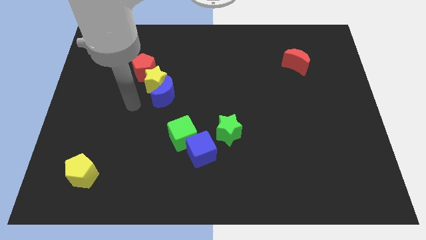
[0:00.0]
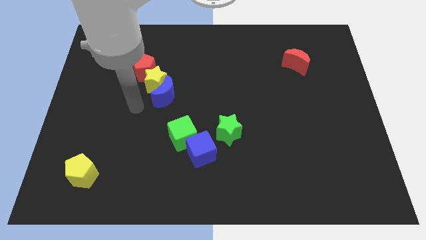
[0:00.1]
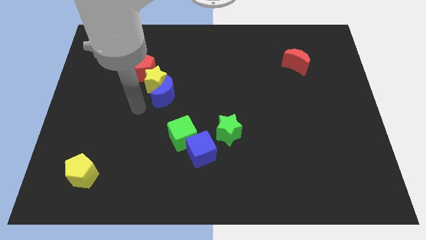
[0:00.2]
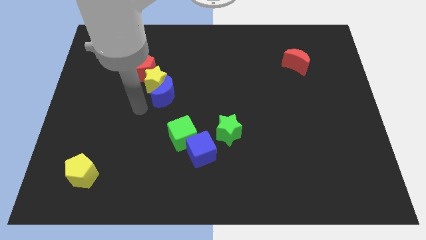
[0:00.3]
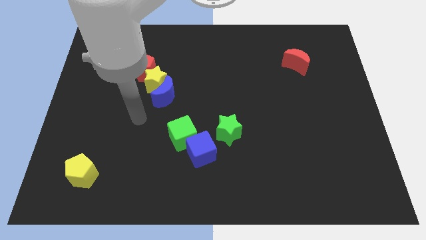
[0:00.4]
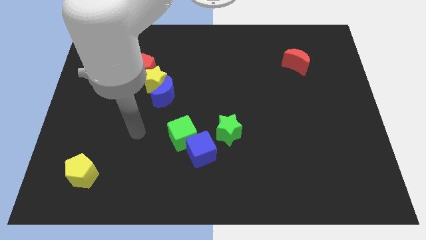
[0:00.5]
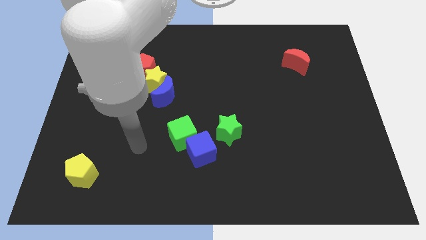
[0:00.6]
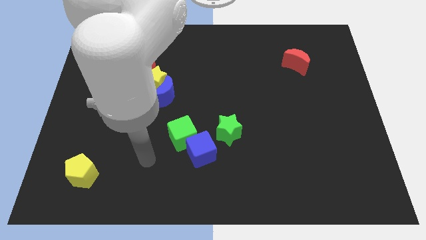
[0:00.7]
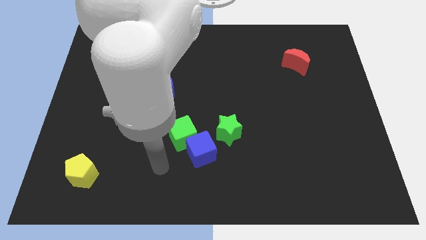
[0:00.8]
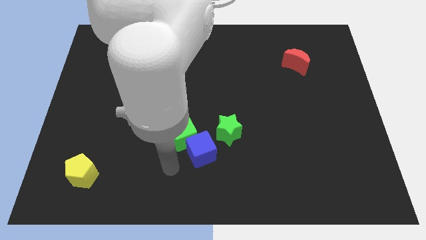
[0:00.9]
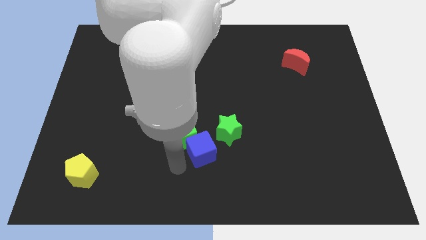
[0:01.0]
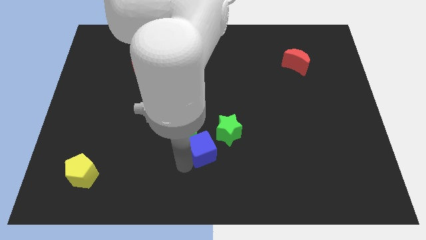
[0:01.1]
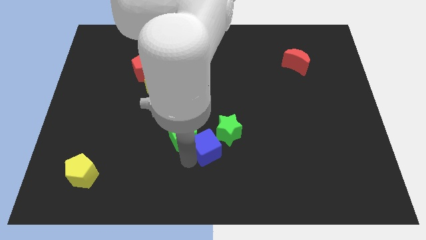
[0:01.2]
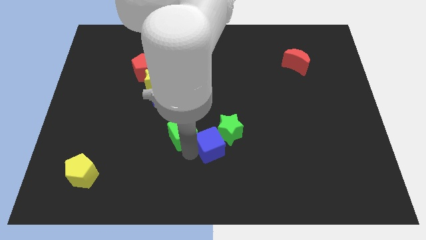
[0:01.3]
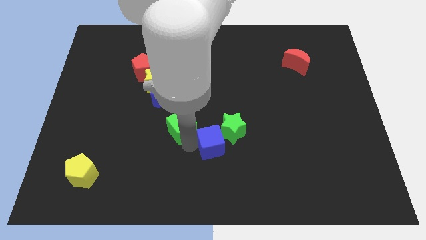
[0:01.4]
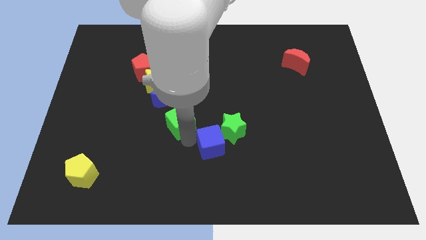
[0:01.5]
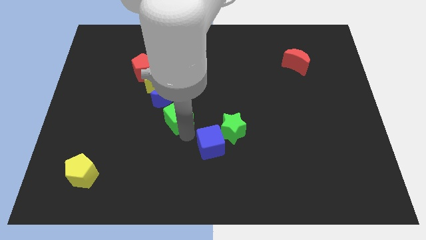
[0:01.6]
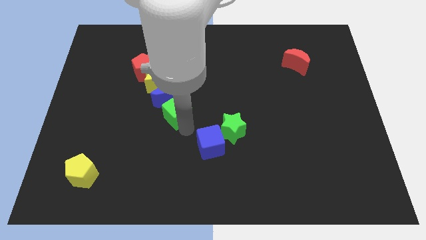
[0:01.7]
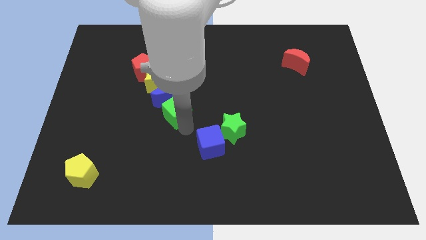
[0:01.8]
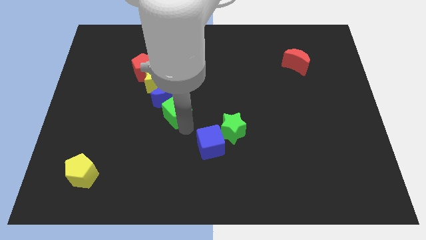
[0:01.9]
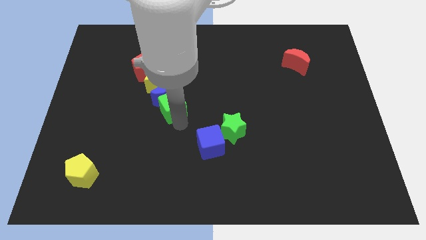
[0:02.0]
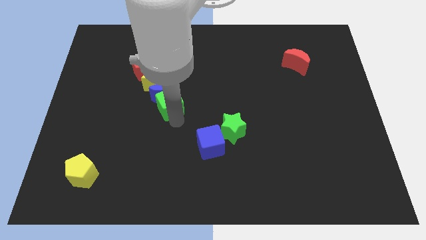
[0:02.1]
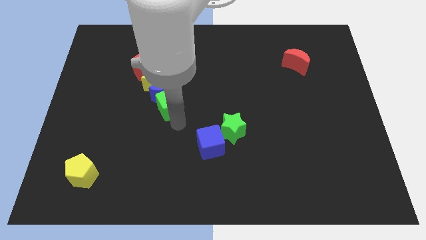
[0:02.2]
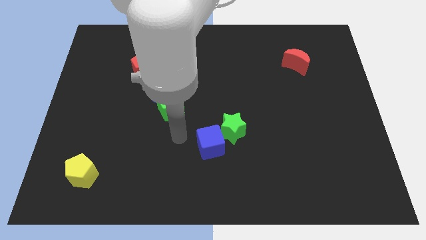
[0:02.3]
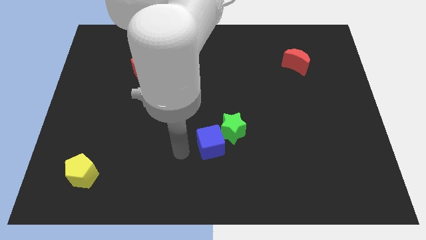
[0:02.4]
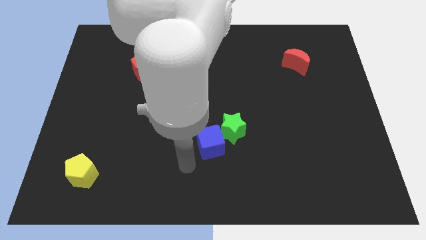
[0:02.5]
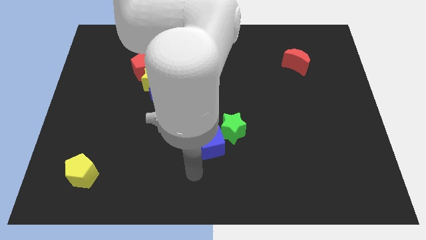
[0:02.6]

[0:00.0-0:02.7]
push the green cube into the blue crescent

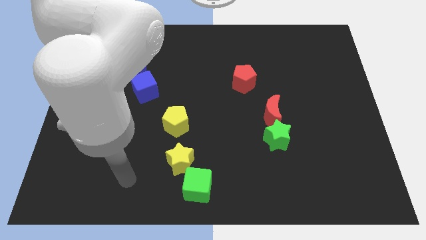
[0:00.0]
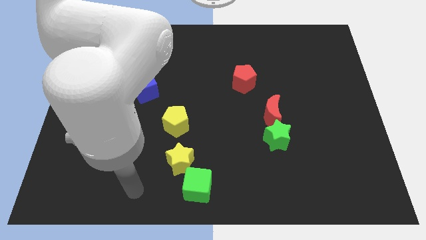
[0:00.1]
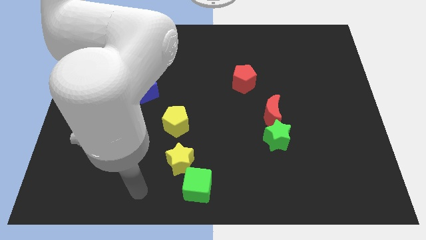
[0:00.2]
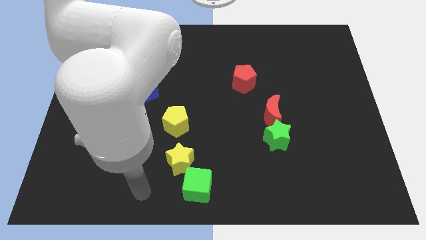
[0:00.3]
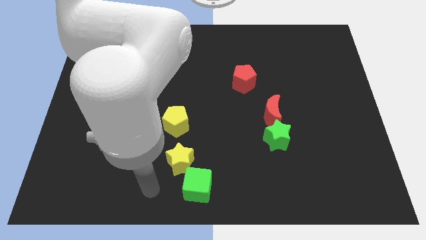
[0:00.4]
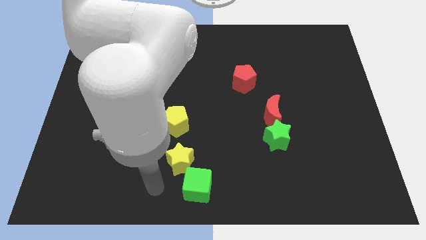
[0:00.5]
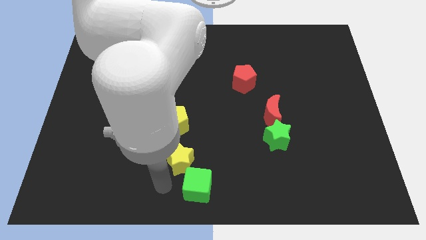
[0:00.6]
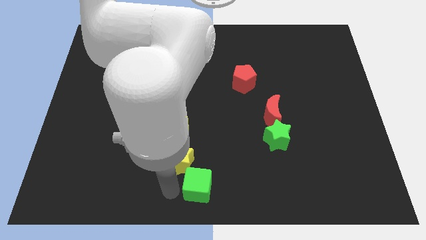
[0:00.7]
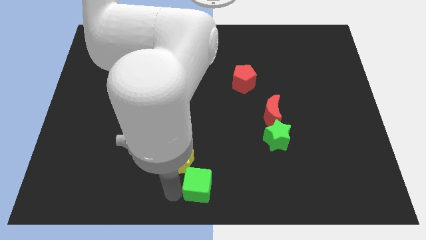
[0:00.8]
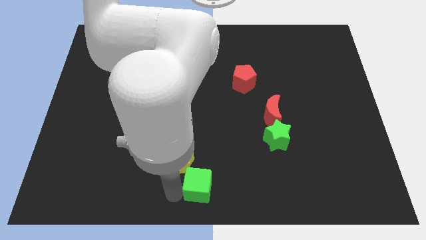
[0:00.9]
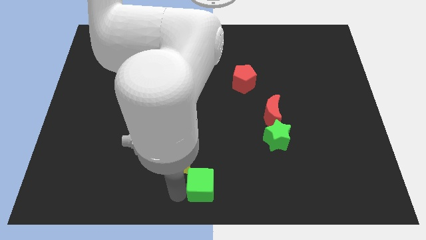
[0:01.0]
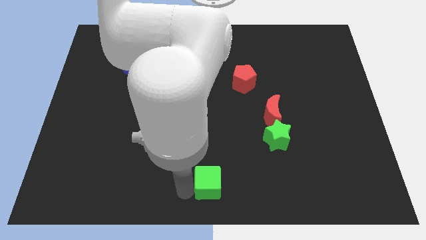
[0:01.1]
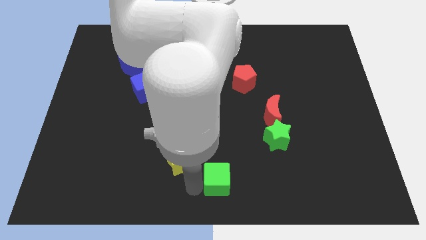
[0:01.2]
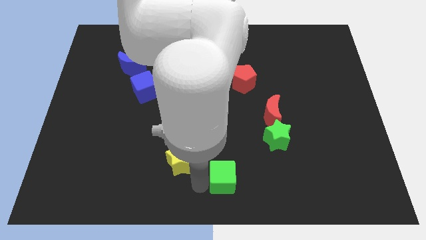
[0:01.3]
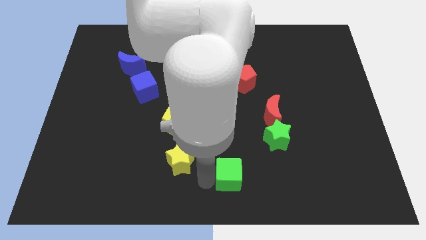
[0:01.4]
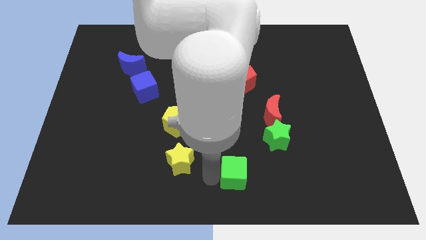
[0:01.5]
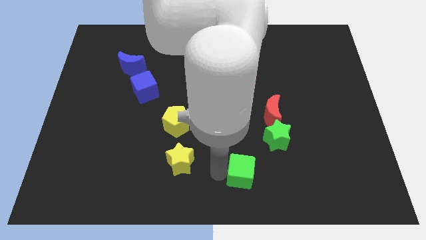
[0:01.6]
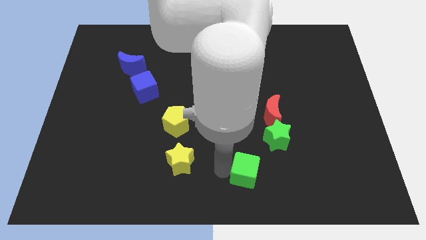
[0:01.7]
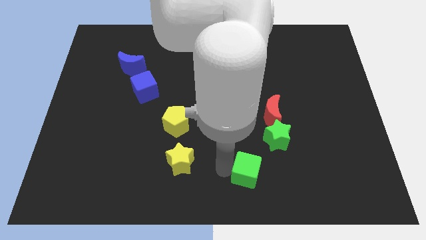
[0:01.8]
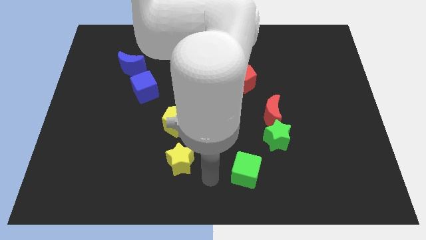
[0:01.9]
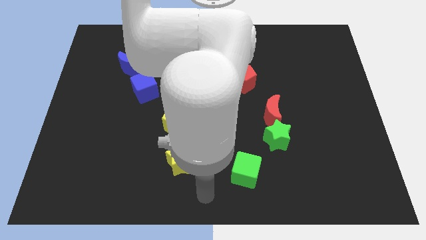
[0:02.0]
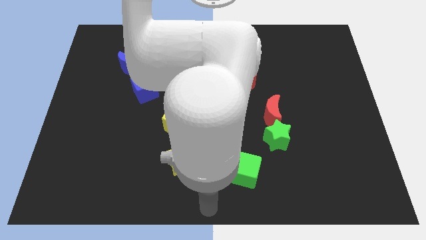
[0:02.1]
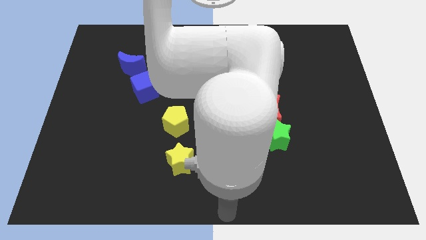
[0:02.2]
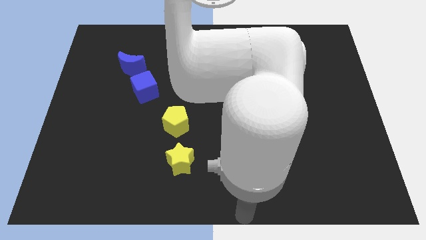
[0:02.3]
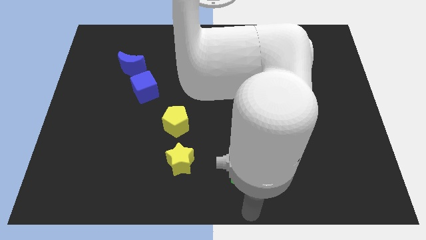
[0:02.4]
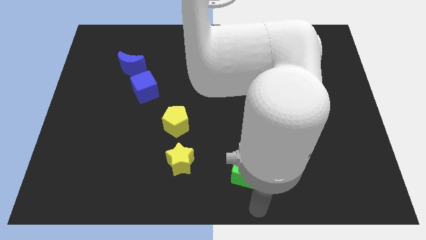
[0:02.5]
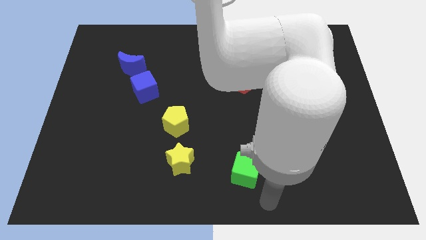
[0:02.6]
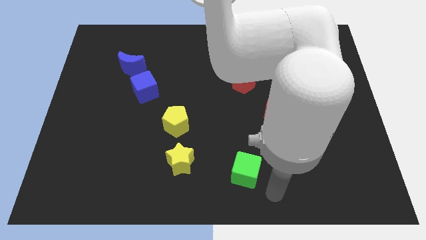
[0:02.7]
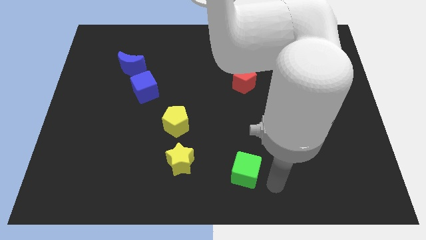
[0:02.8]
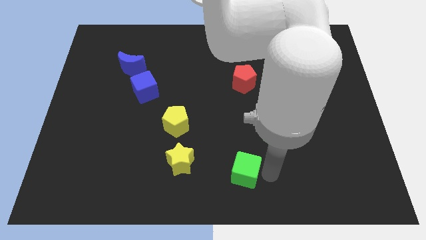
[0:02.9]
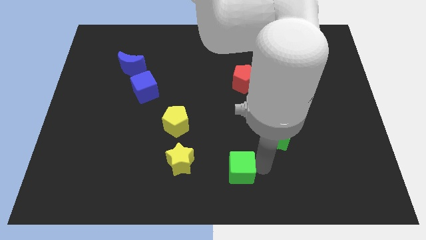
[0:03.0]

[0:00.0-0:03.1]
place green cube to the right of yellow star

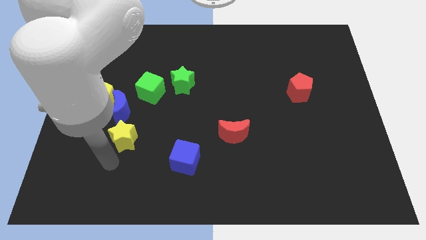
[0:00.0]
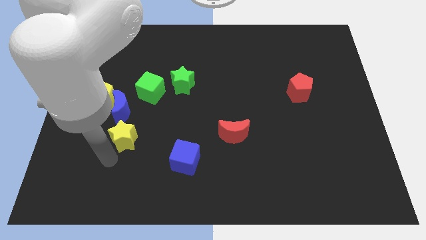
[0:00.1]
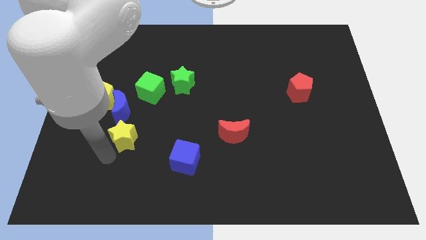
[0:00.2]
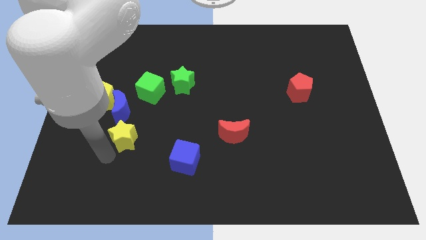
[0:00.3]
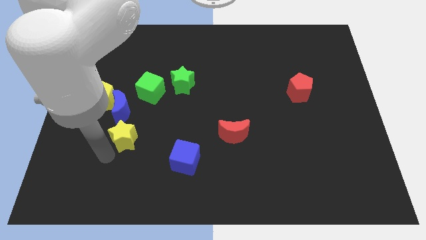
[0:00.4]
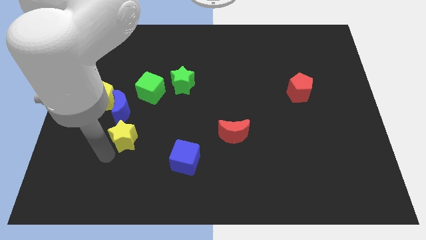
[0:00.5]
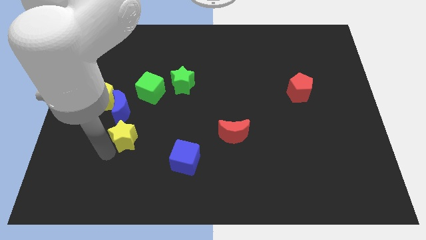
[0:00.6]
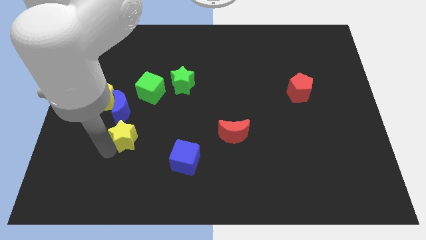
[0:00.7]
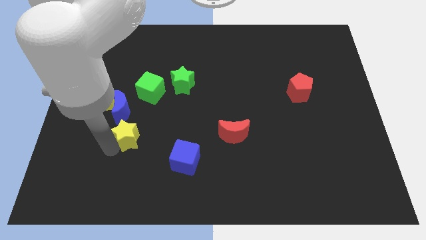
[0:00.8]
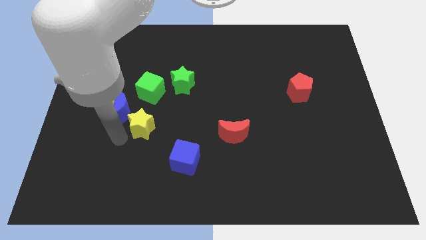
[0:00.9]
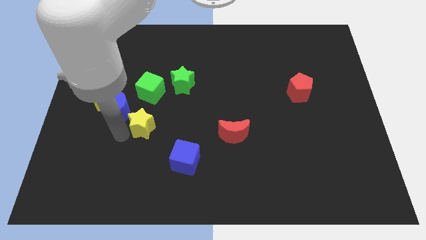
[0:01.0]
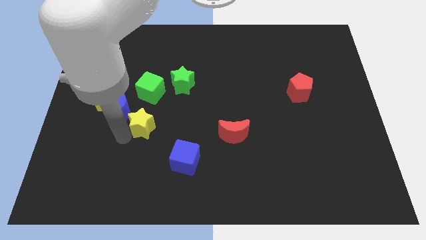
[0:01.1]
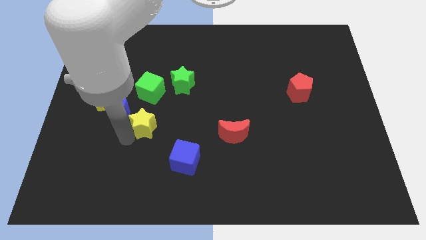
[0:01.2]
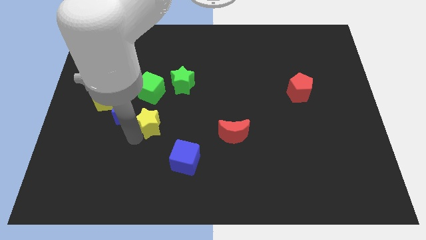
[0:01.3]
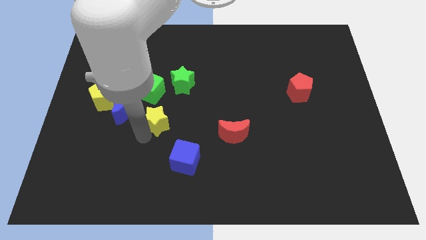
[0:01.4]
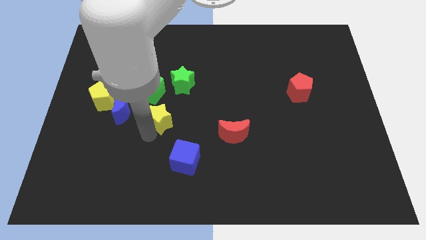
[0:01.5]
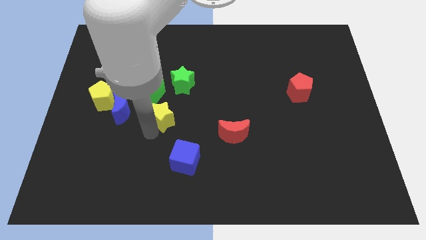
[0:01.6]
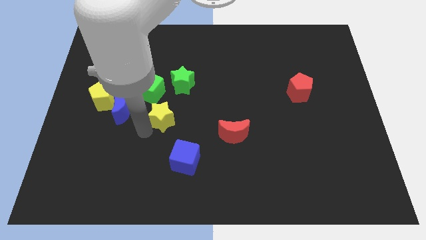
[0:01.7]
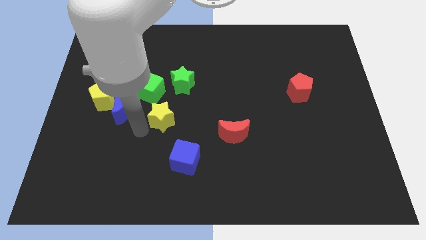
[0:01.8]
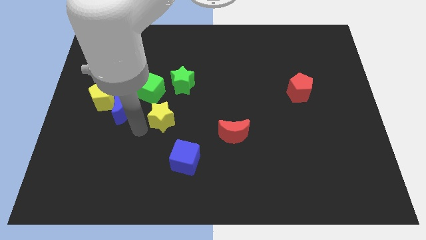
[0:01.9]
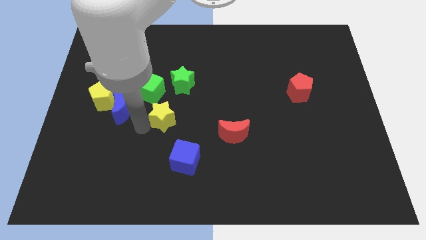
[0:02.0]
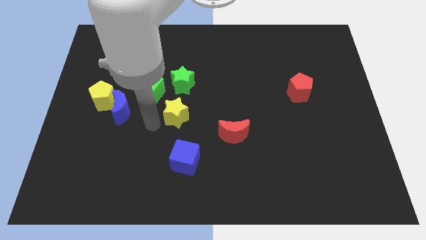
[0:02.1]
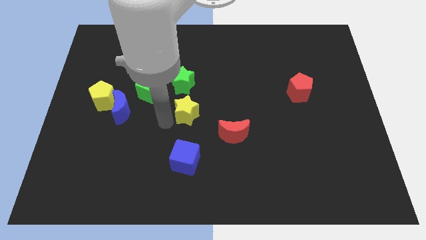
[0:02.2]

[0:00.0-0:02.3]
place the yellow star down to the green star

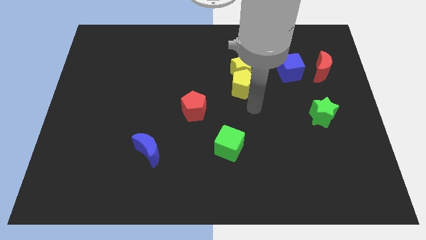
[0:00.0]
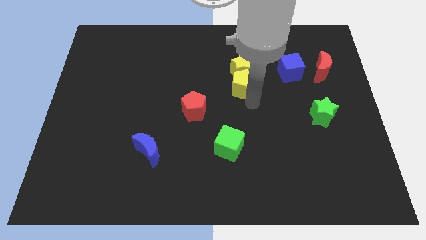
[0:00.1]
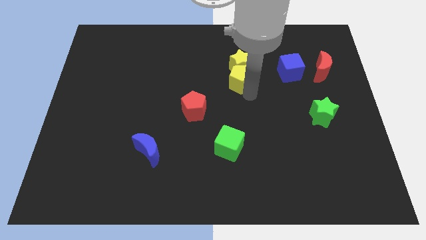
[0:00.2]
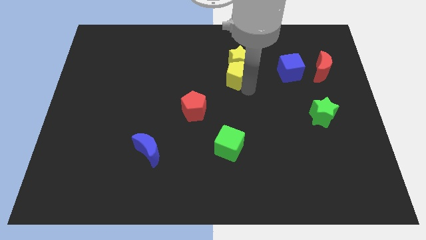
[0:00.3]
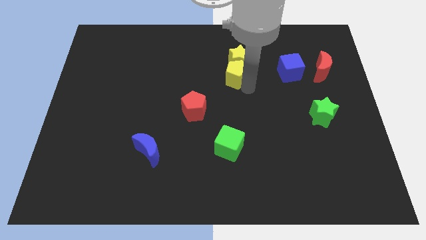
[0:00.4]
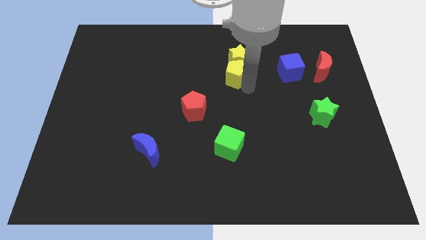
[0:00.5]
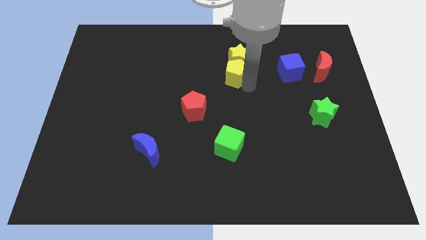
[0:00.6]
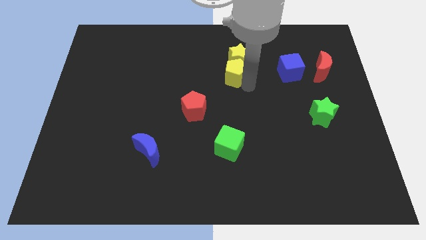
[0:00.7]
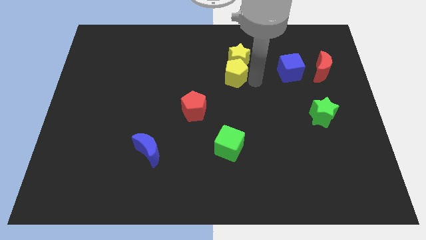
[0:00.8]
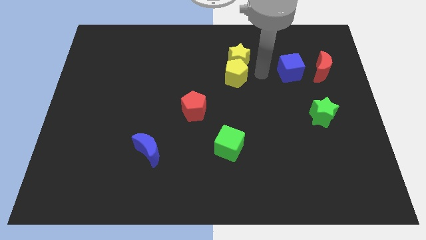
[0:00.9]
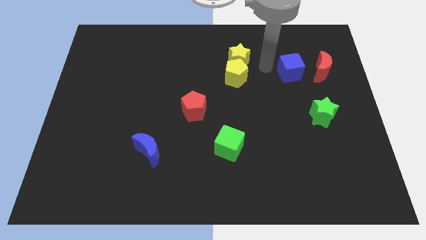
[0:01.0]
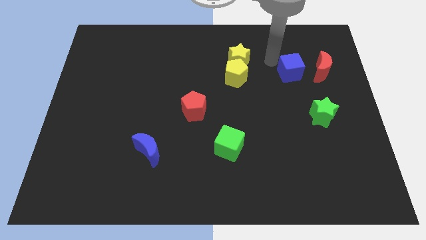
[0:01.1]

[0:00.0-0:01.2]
push the yellow pentagon and the yellow star upwards
